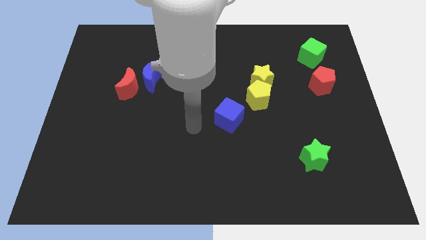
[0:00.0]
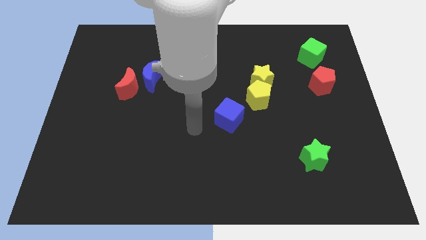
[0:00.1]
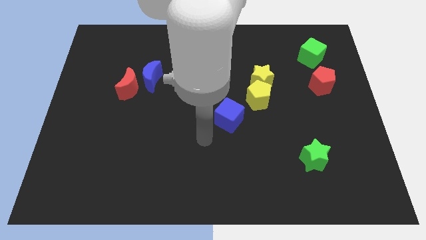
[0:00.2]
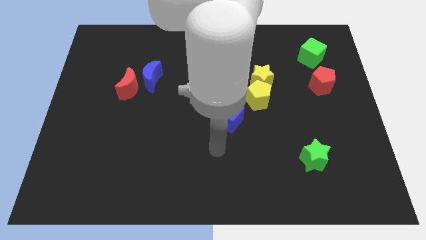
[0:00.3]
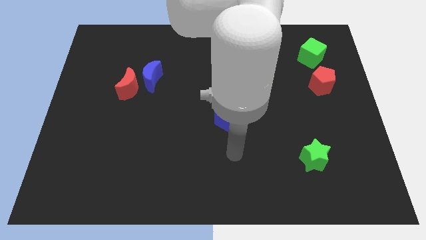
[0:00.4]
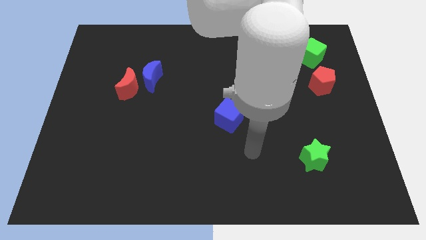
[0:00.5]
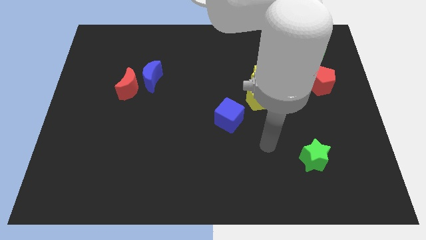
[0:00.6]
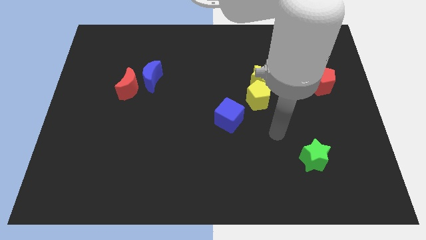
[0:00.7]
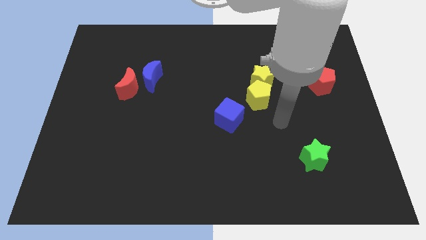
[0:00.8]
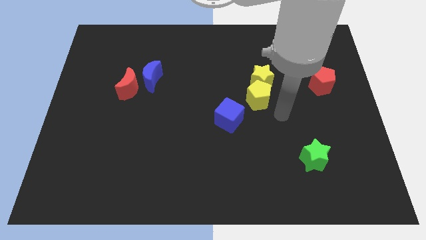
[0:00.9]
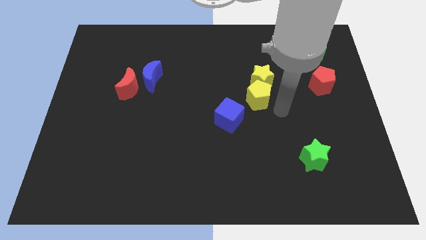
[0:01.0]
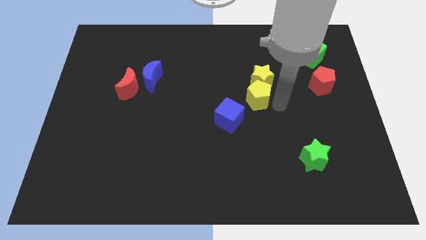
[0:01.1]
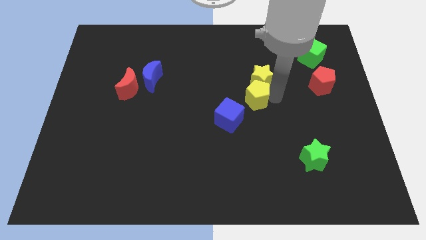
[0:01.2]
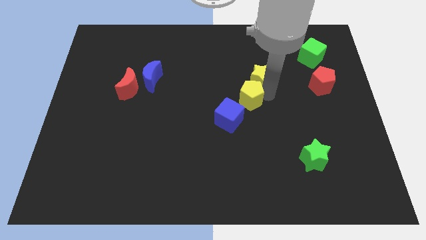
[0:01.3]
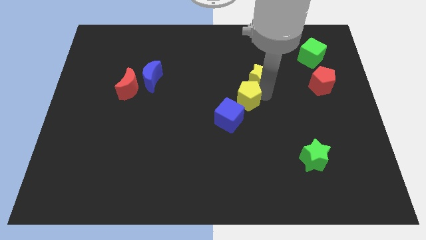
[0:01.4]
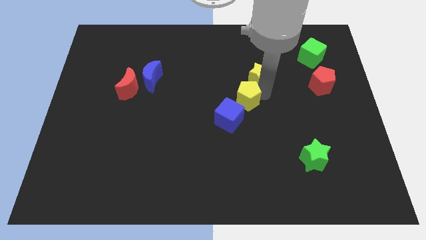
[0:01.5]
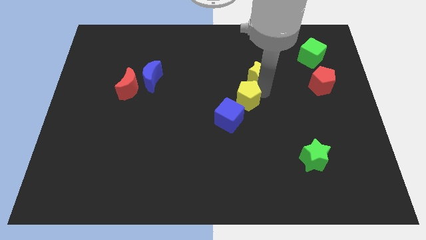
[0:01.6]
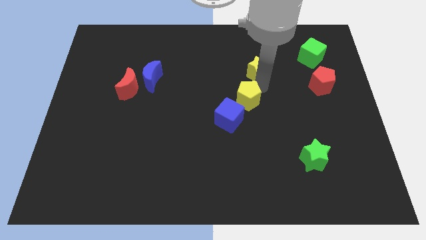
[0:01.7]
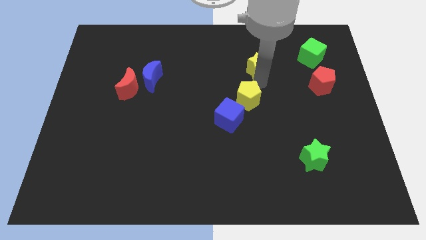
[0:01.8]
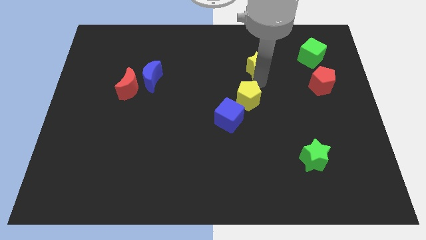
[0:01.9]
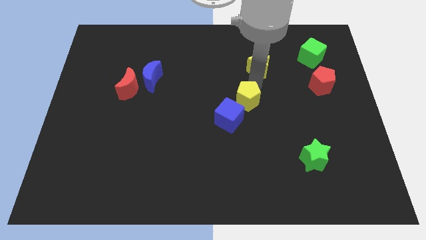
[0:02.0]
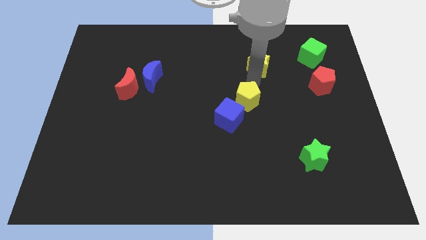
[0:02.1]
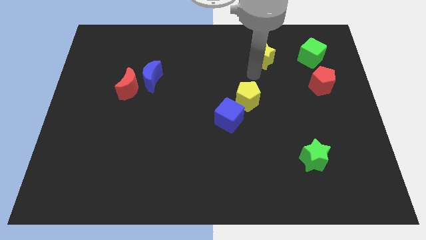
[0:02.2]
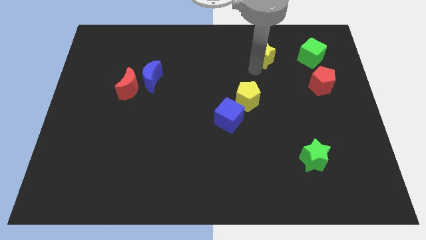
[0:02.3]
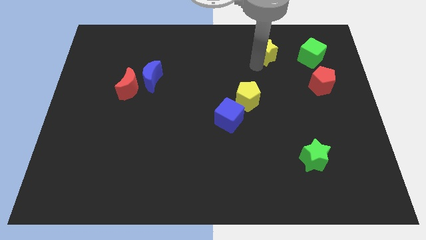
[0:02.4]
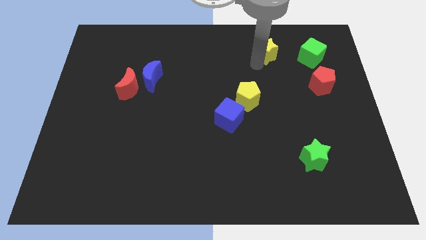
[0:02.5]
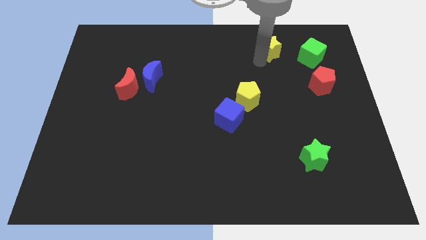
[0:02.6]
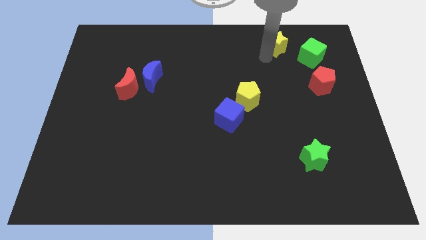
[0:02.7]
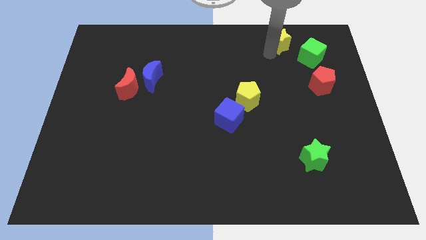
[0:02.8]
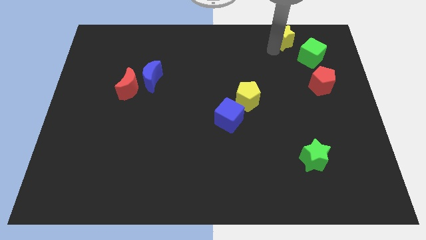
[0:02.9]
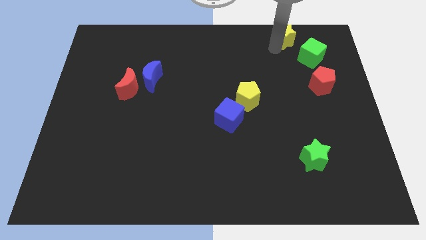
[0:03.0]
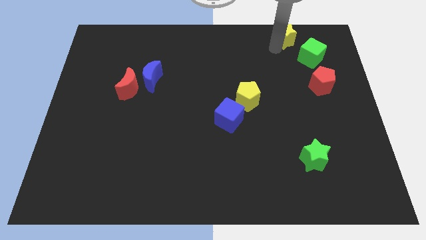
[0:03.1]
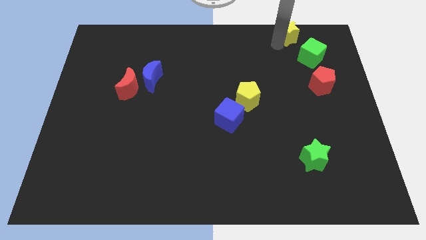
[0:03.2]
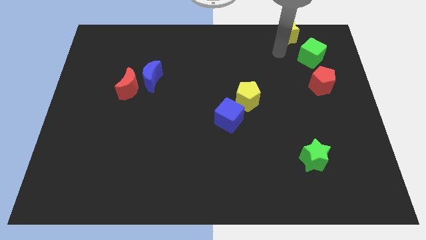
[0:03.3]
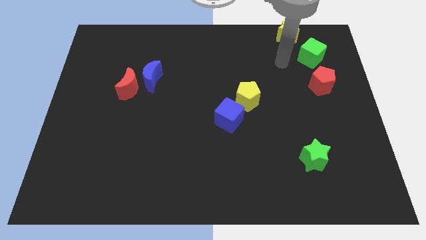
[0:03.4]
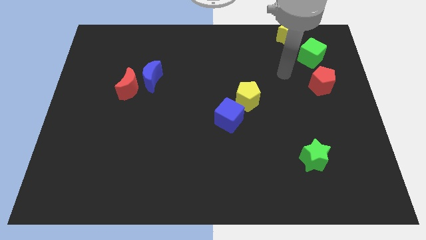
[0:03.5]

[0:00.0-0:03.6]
move the yellow star to the top right side of the board

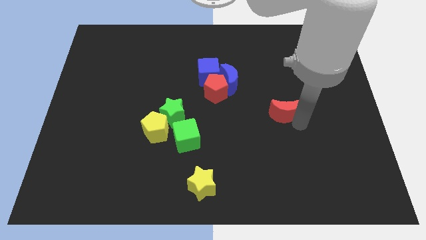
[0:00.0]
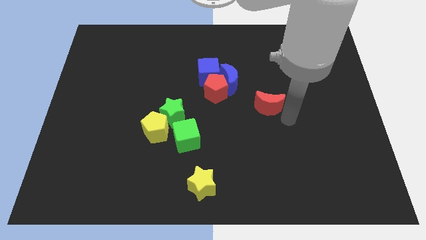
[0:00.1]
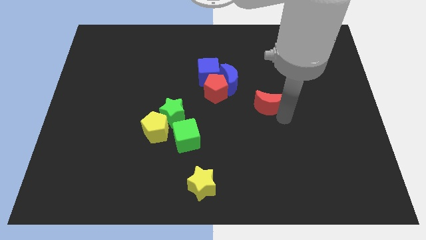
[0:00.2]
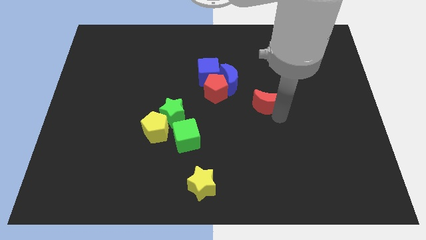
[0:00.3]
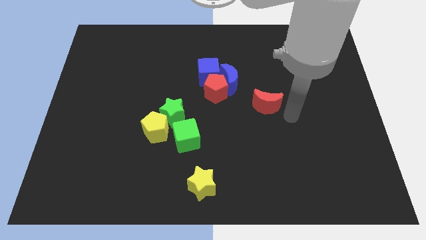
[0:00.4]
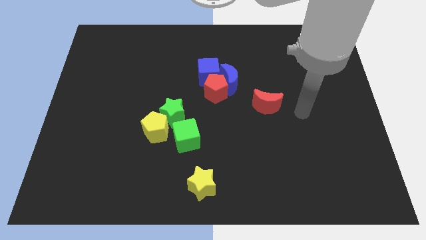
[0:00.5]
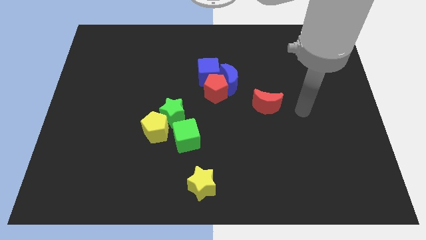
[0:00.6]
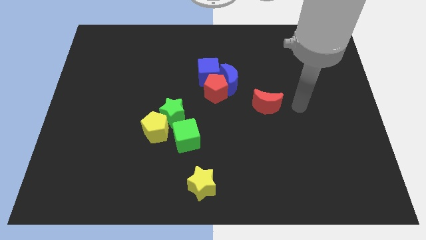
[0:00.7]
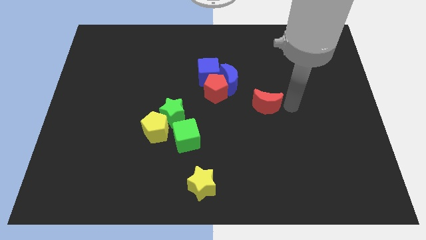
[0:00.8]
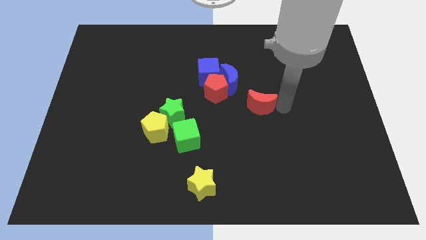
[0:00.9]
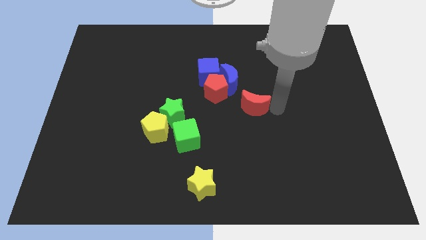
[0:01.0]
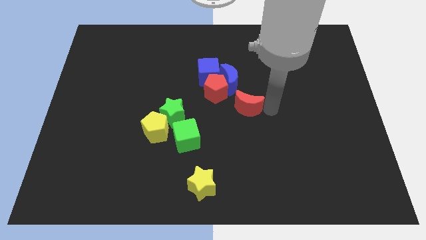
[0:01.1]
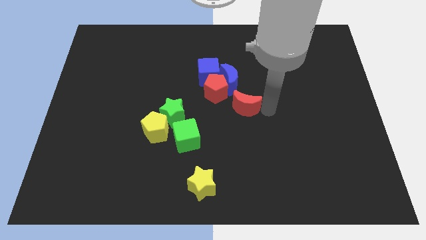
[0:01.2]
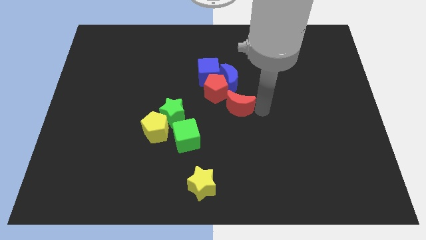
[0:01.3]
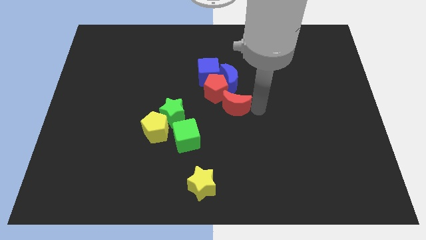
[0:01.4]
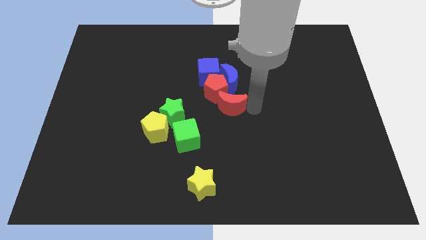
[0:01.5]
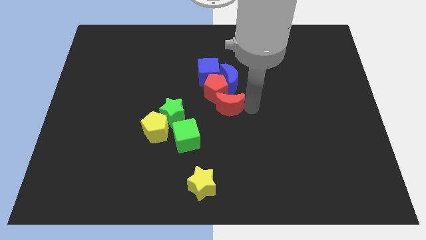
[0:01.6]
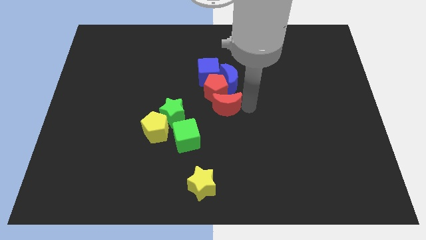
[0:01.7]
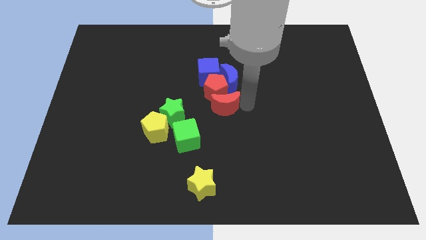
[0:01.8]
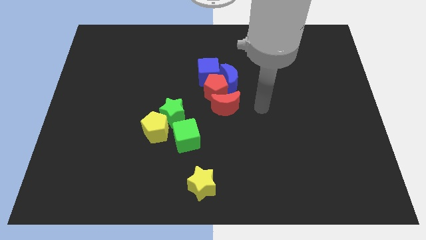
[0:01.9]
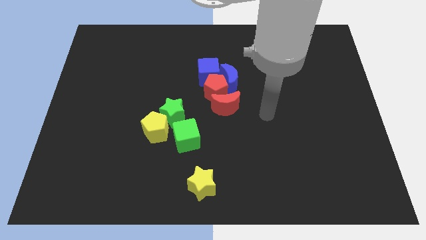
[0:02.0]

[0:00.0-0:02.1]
slide red moon into red pentagon

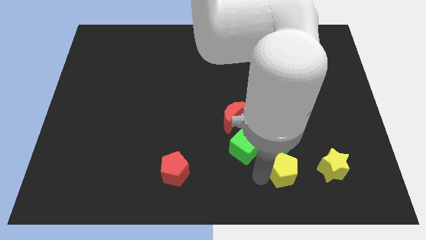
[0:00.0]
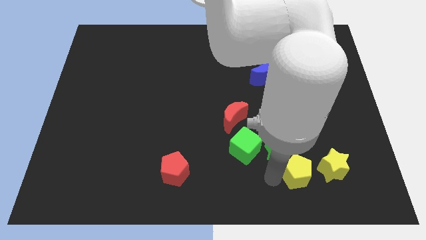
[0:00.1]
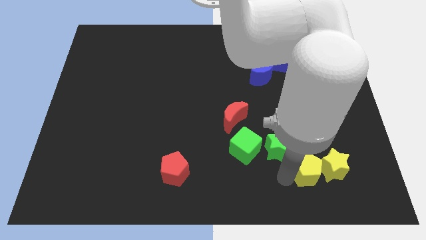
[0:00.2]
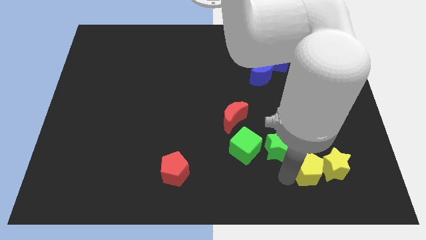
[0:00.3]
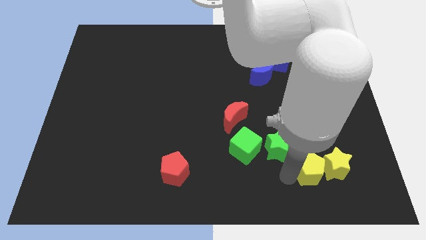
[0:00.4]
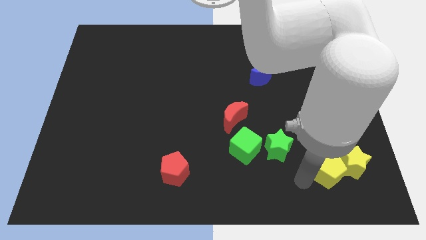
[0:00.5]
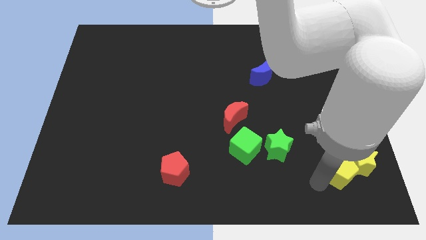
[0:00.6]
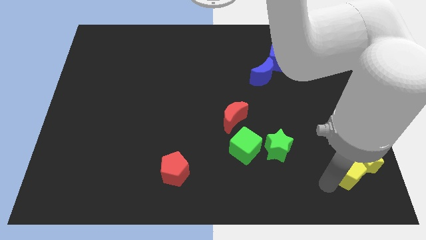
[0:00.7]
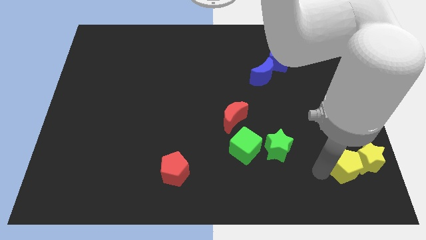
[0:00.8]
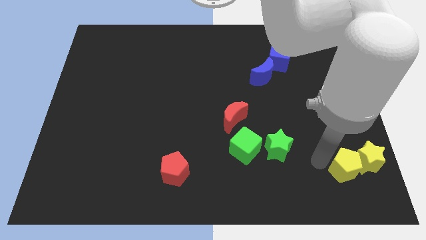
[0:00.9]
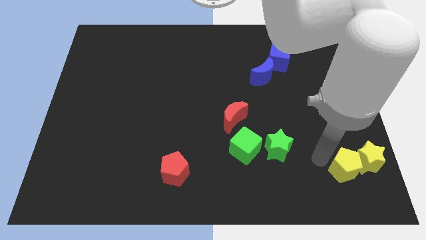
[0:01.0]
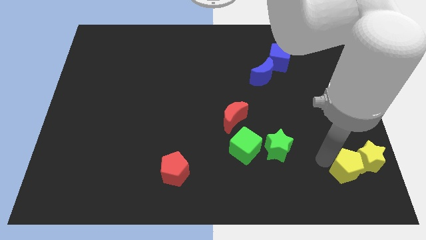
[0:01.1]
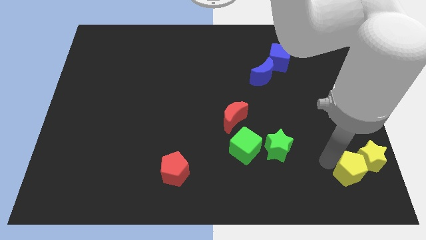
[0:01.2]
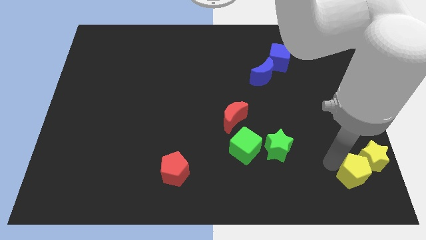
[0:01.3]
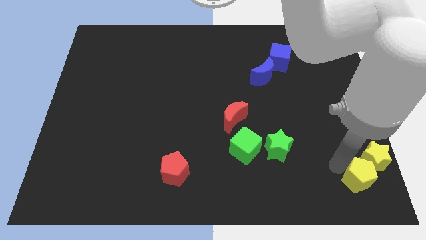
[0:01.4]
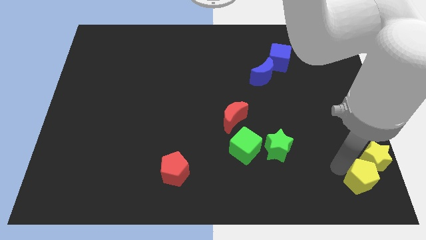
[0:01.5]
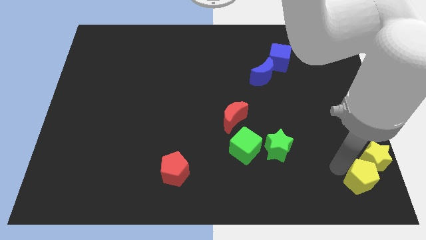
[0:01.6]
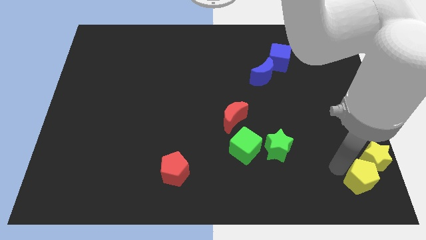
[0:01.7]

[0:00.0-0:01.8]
push the yellow star with the yellow pentagon

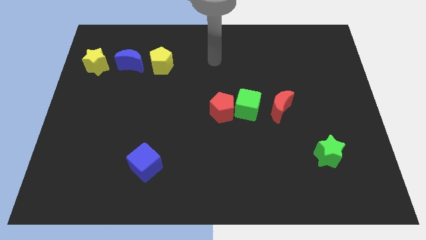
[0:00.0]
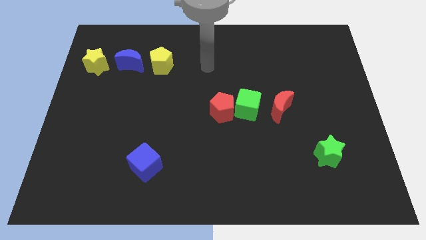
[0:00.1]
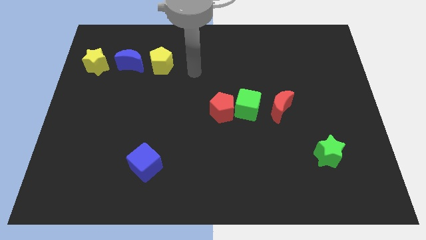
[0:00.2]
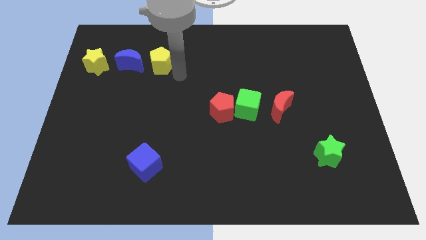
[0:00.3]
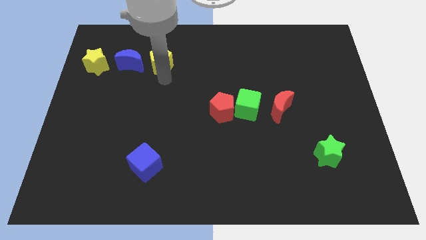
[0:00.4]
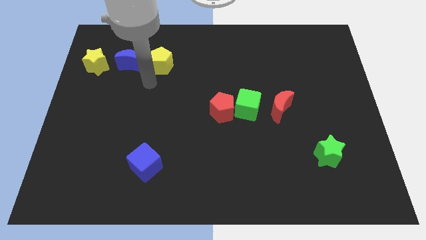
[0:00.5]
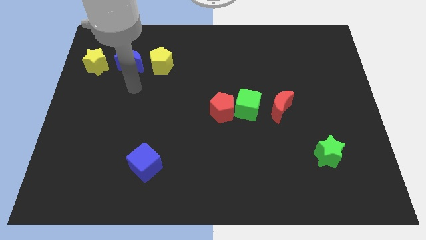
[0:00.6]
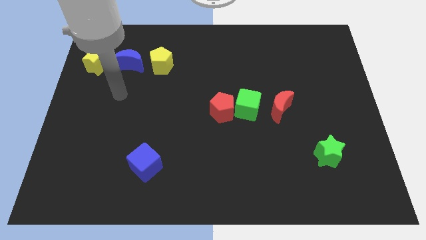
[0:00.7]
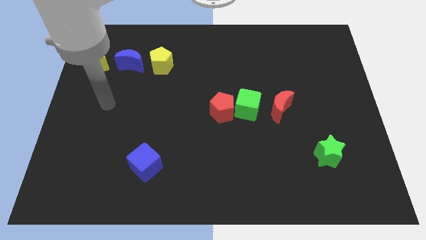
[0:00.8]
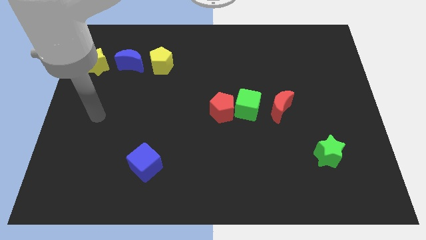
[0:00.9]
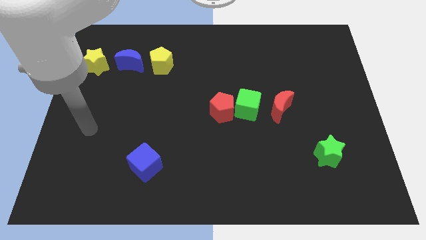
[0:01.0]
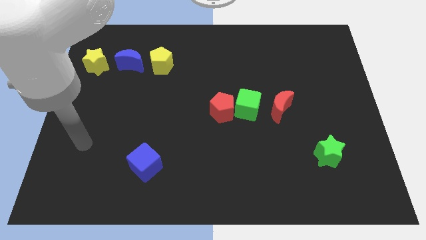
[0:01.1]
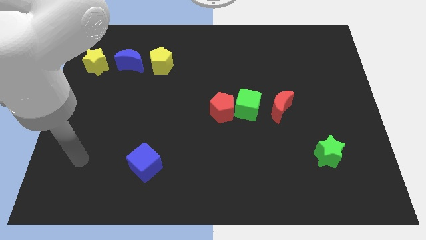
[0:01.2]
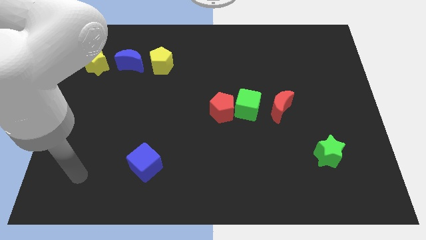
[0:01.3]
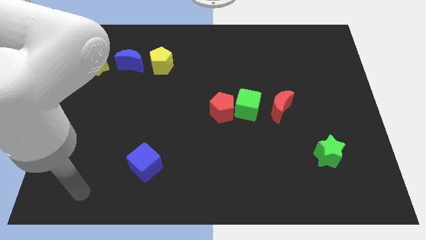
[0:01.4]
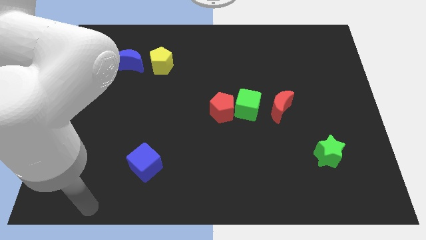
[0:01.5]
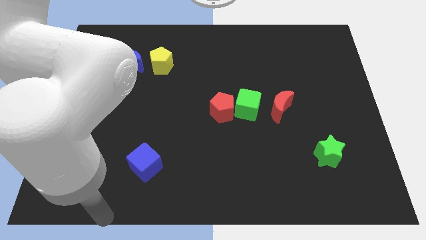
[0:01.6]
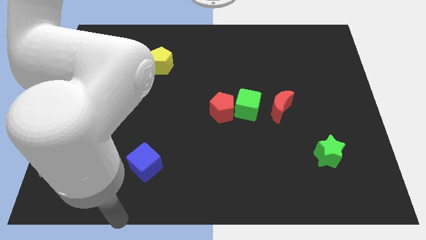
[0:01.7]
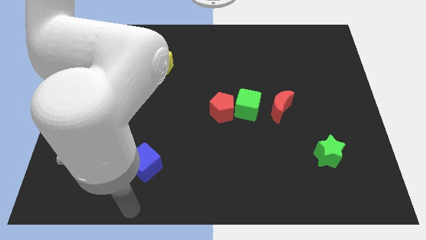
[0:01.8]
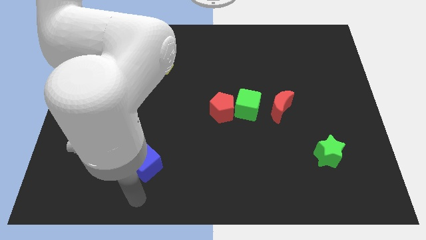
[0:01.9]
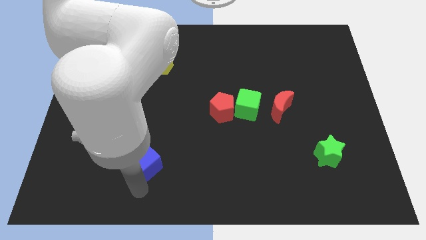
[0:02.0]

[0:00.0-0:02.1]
place your arm below blue cube
